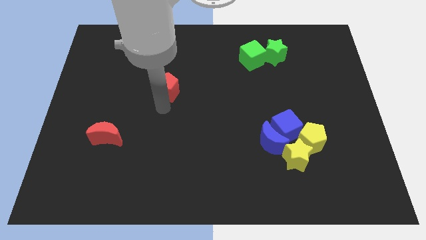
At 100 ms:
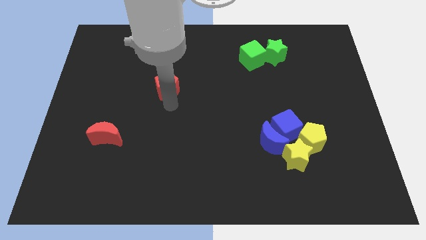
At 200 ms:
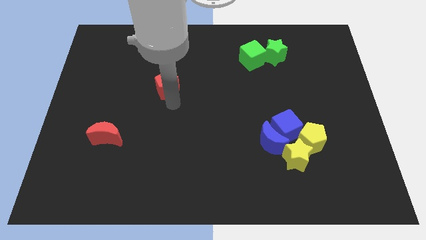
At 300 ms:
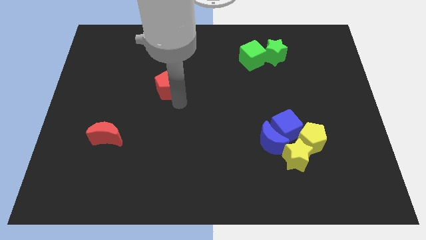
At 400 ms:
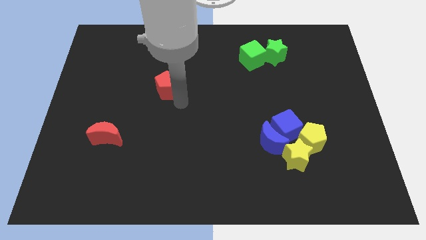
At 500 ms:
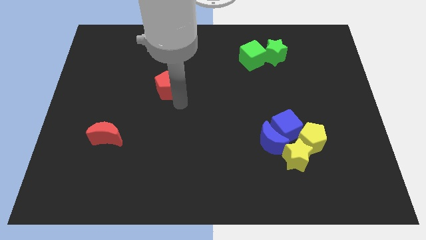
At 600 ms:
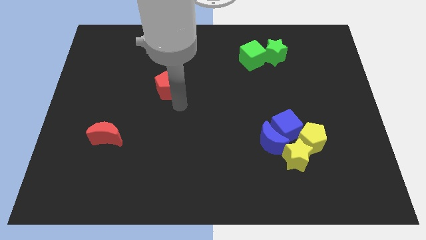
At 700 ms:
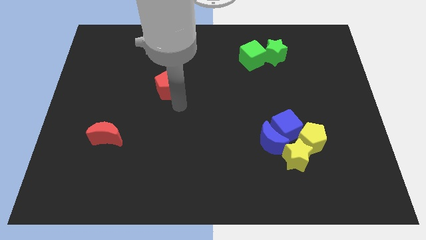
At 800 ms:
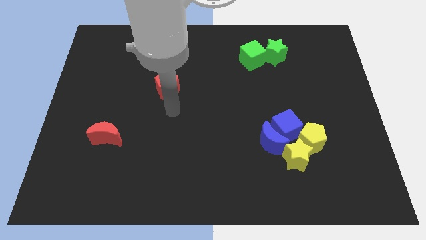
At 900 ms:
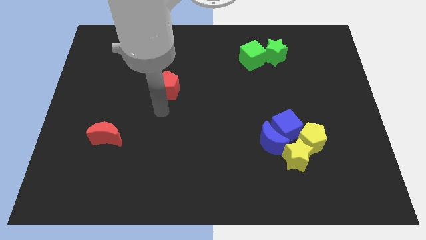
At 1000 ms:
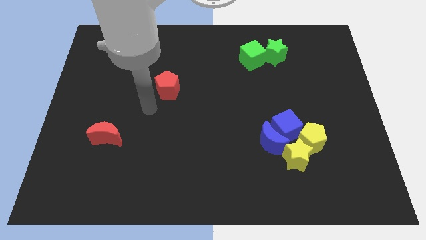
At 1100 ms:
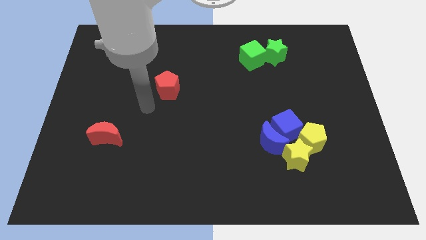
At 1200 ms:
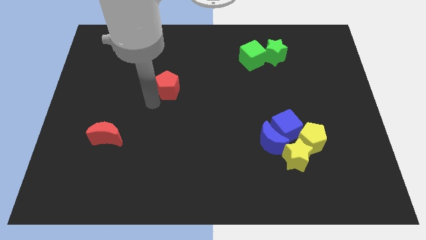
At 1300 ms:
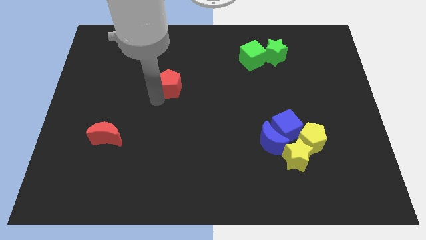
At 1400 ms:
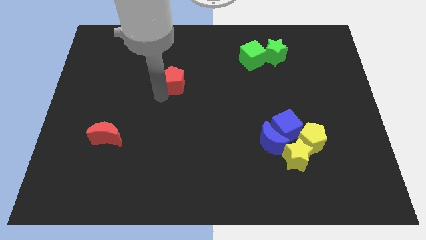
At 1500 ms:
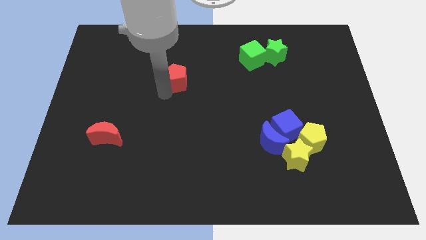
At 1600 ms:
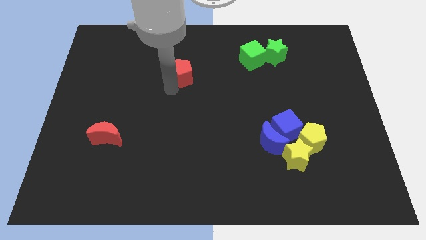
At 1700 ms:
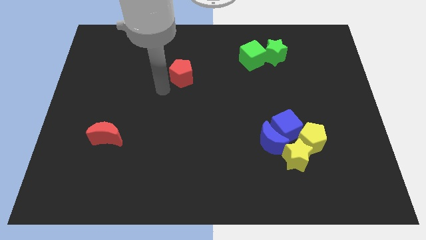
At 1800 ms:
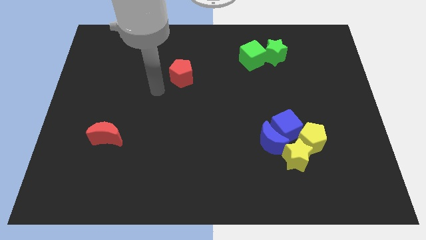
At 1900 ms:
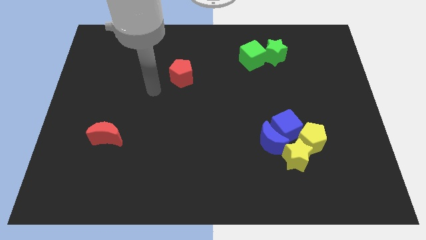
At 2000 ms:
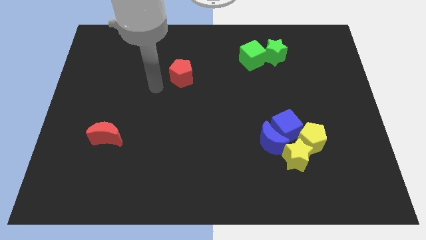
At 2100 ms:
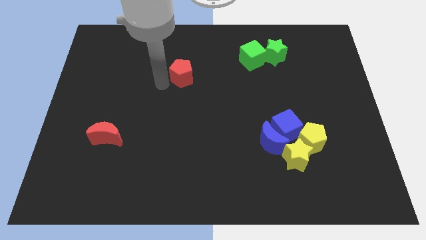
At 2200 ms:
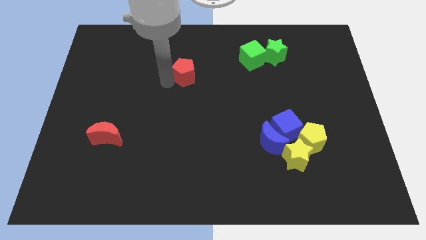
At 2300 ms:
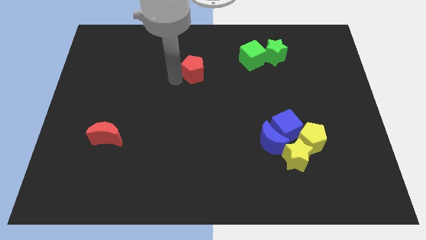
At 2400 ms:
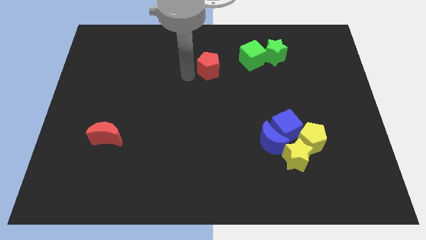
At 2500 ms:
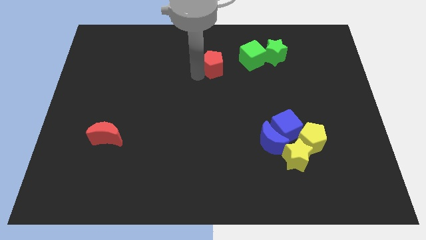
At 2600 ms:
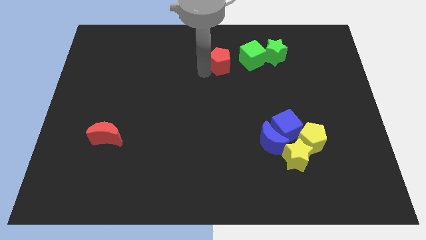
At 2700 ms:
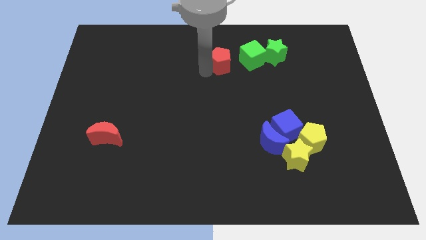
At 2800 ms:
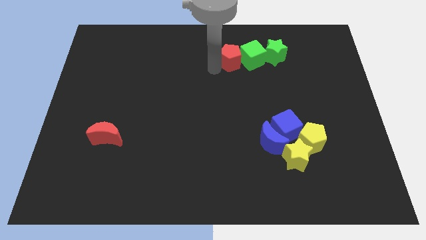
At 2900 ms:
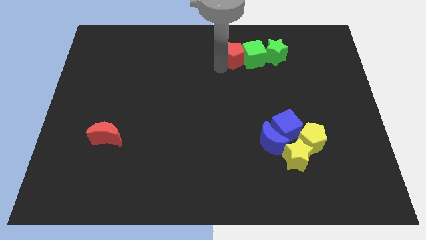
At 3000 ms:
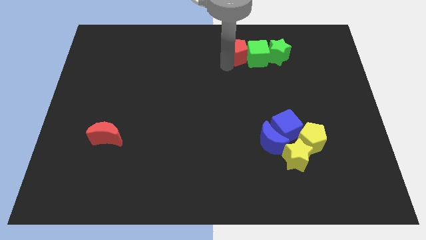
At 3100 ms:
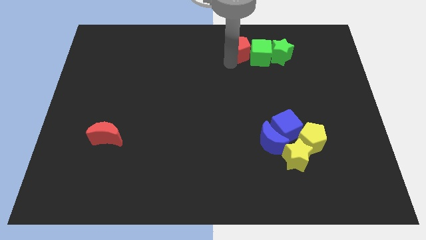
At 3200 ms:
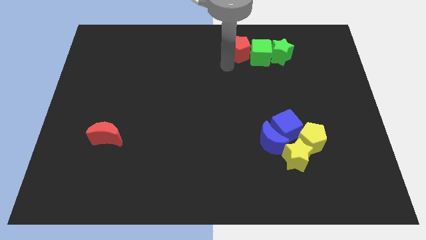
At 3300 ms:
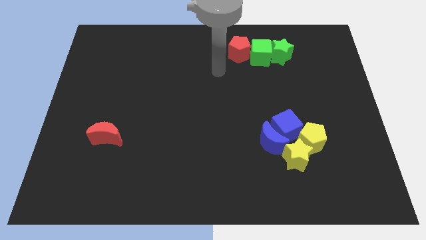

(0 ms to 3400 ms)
push the red pentagon into the green blocks

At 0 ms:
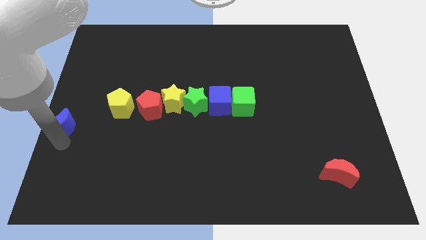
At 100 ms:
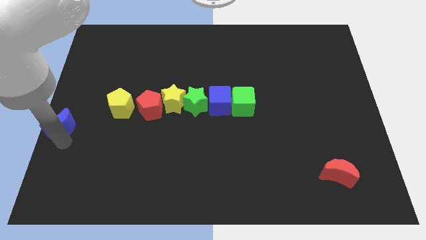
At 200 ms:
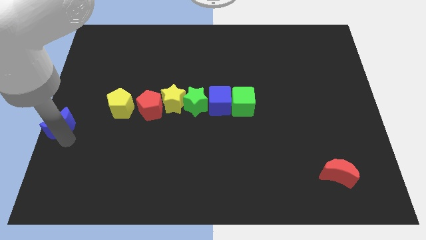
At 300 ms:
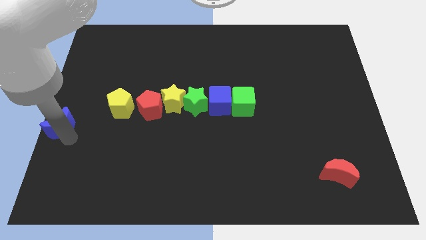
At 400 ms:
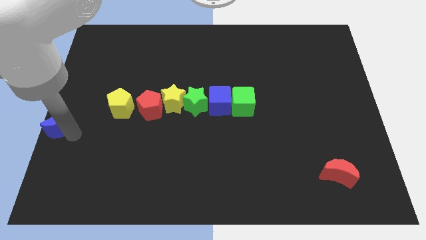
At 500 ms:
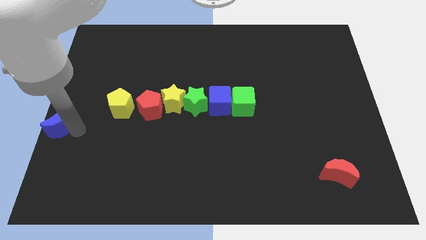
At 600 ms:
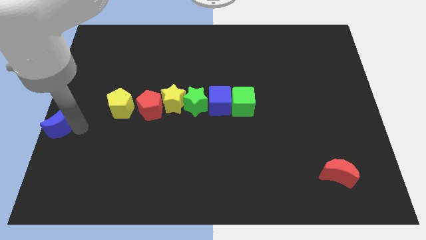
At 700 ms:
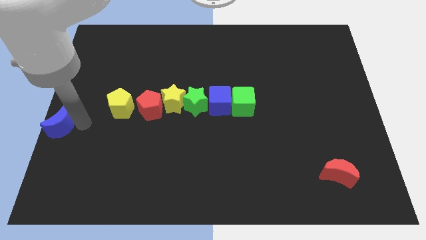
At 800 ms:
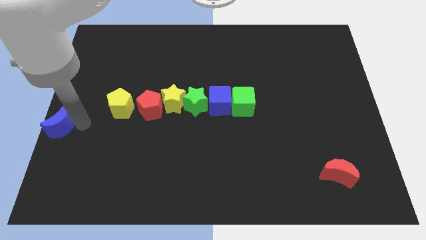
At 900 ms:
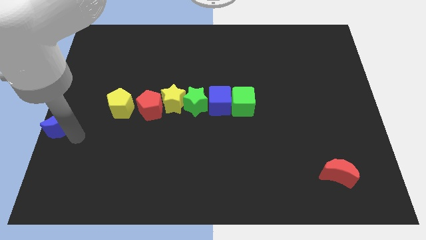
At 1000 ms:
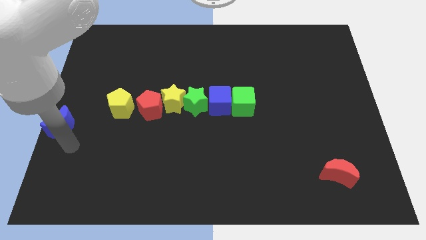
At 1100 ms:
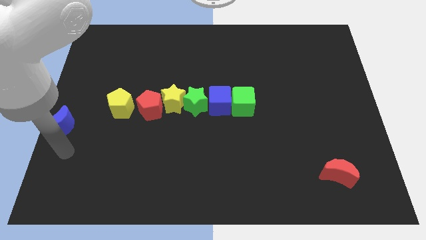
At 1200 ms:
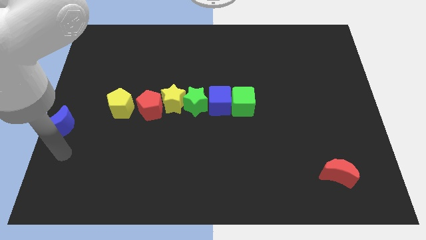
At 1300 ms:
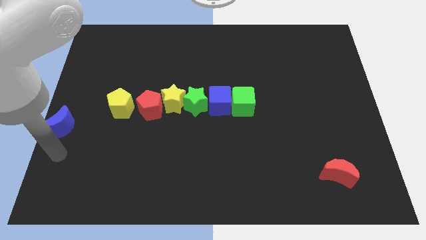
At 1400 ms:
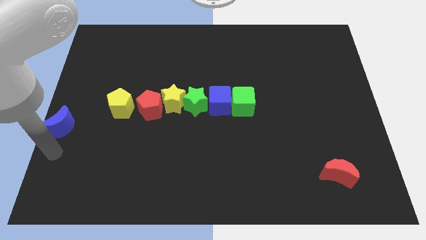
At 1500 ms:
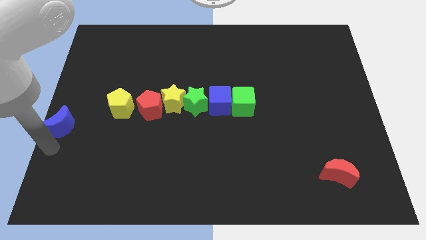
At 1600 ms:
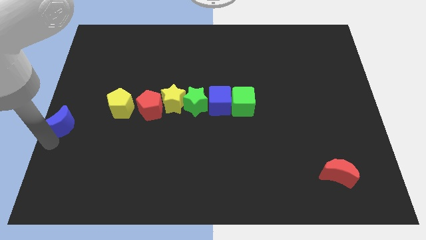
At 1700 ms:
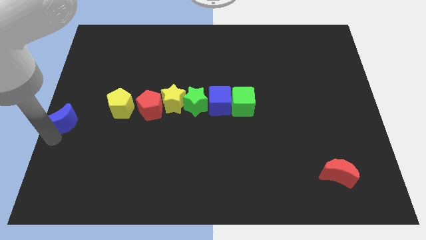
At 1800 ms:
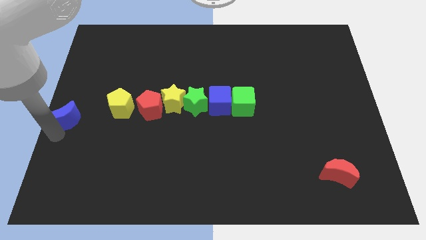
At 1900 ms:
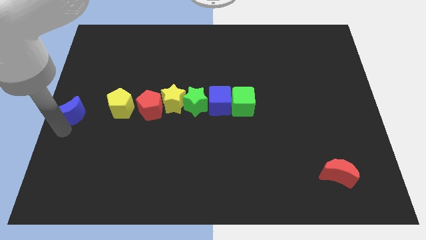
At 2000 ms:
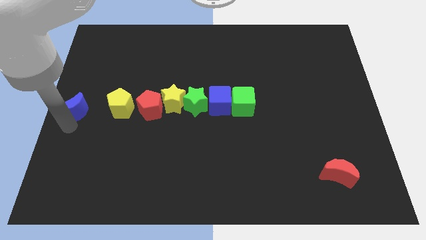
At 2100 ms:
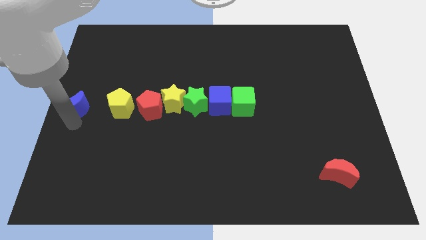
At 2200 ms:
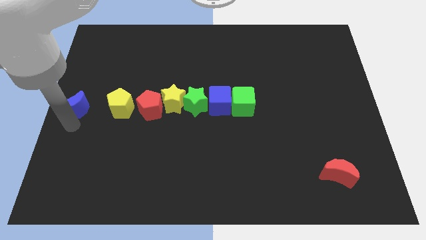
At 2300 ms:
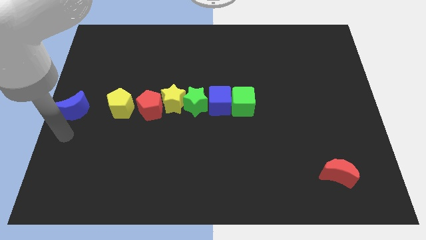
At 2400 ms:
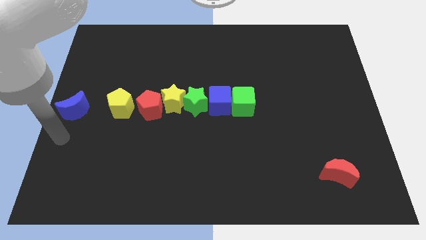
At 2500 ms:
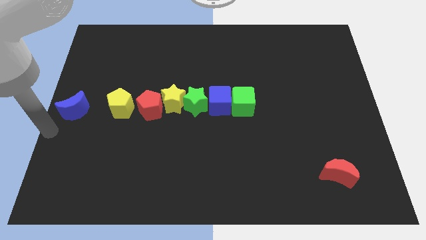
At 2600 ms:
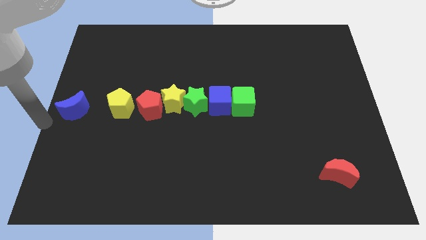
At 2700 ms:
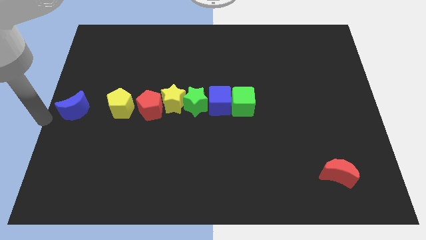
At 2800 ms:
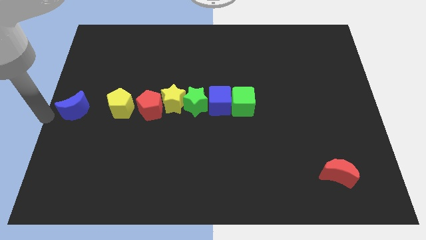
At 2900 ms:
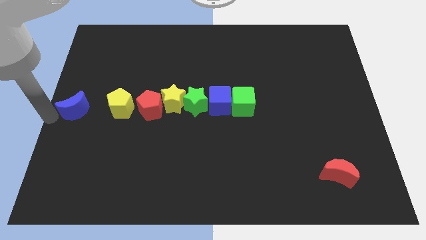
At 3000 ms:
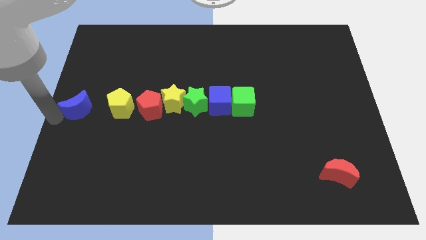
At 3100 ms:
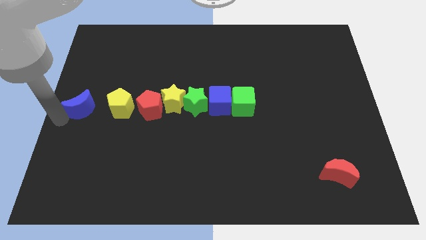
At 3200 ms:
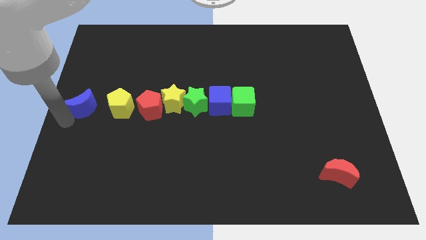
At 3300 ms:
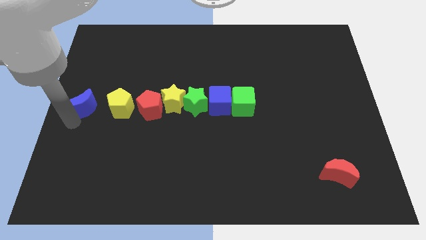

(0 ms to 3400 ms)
move the blue crescent to the left of the yellow pentagon

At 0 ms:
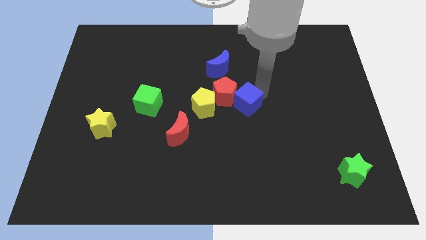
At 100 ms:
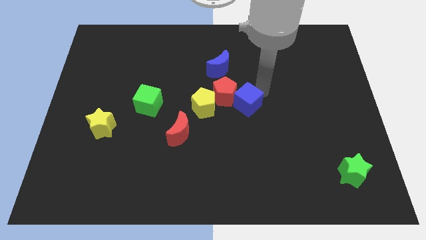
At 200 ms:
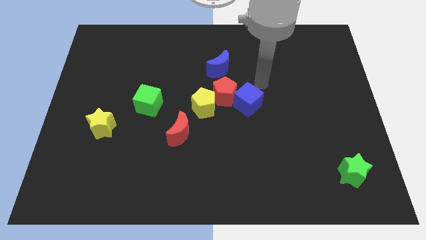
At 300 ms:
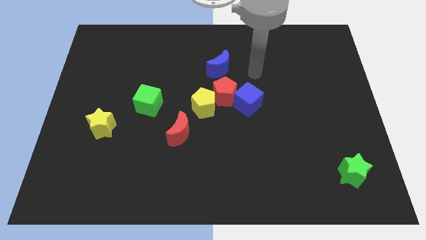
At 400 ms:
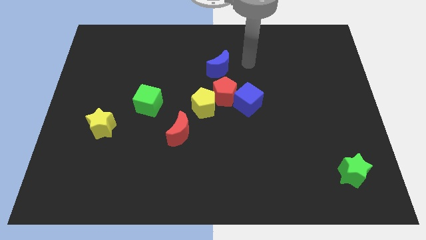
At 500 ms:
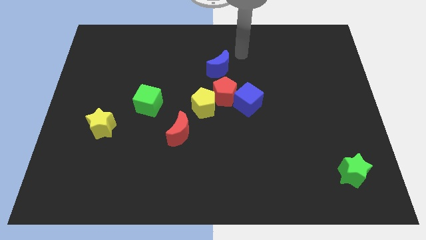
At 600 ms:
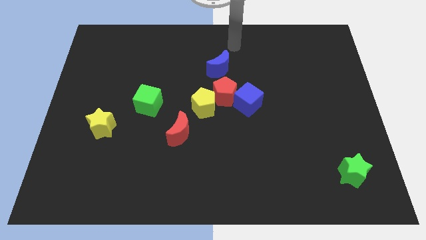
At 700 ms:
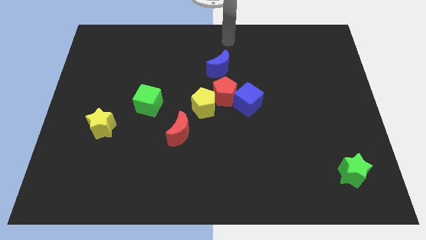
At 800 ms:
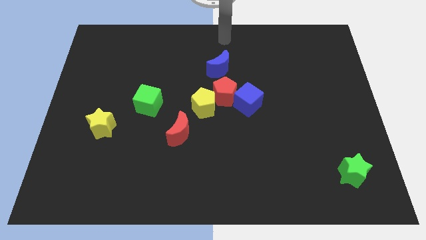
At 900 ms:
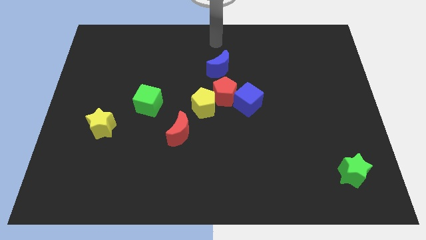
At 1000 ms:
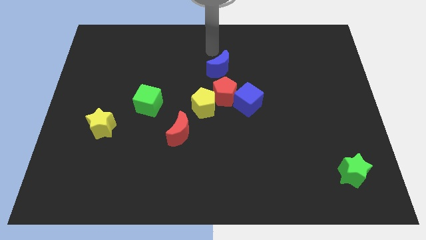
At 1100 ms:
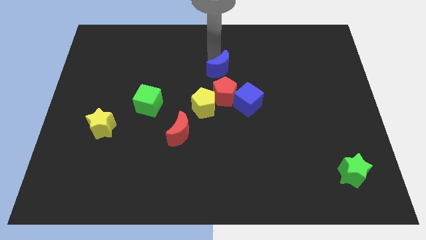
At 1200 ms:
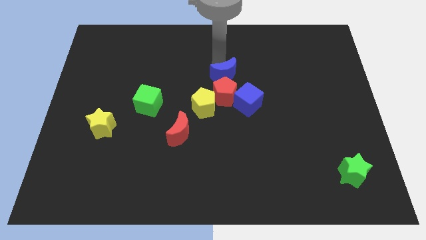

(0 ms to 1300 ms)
place your arm above blue moon

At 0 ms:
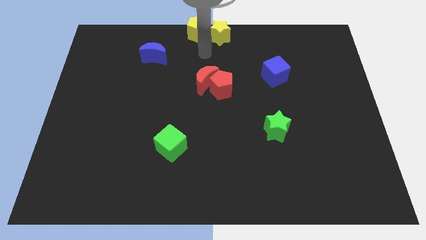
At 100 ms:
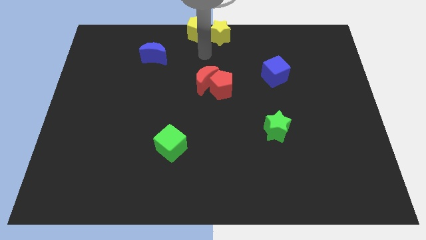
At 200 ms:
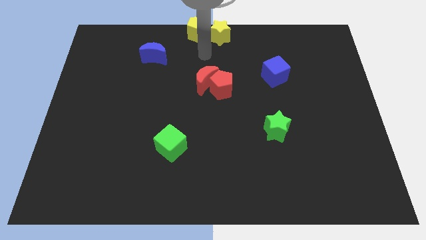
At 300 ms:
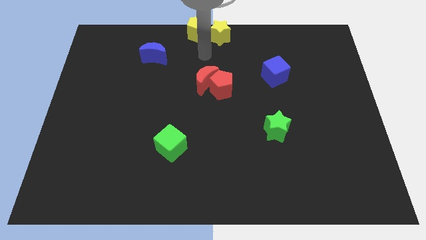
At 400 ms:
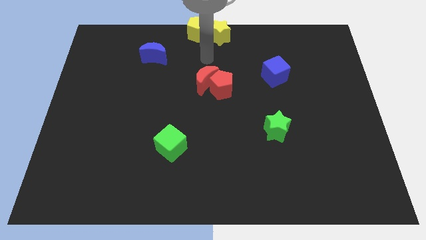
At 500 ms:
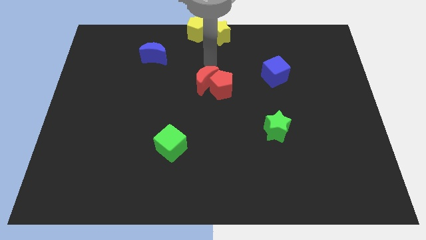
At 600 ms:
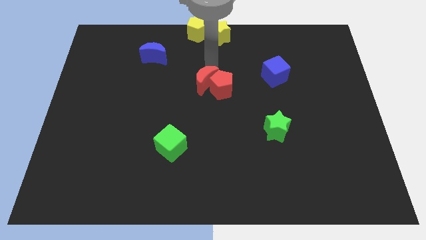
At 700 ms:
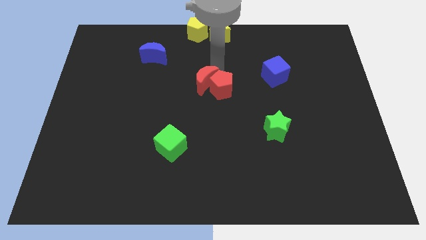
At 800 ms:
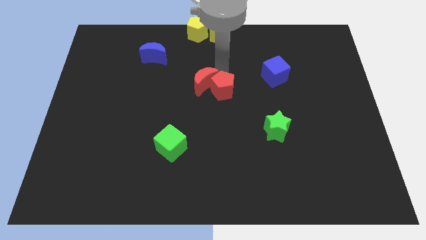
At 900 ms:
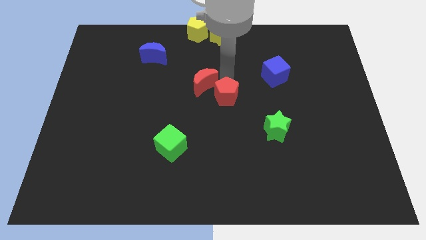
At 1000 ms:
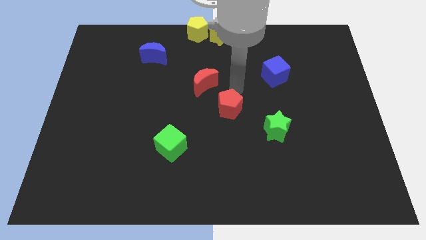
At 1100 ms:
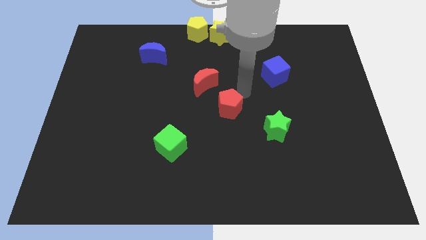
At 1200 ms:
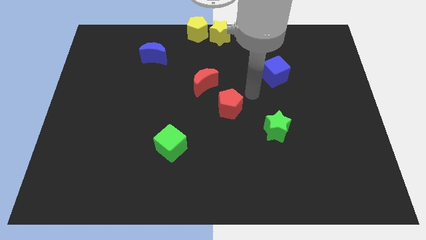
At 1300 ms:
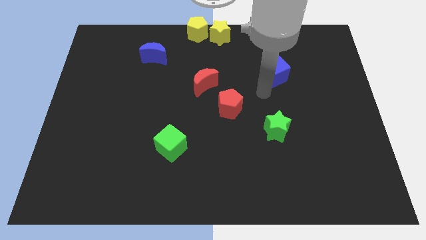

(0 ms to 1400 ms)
separate the red blocks
